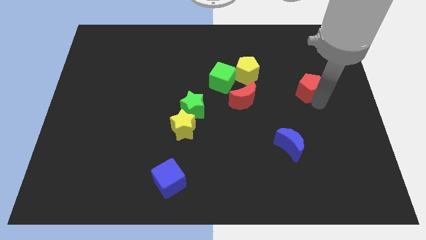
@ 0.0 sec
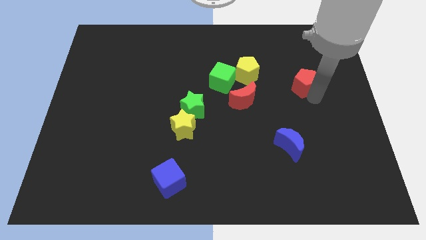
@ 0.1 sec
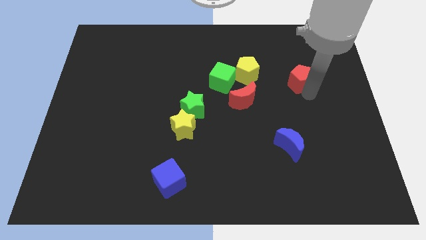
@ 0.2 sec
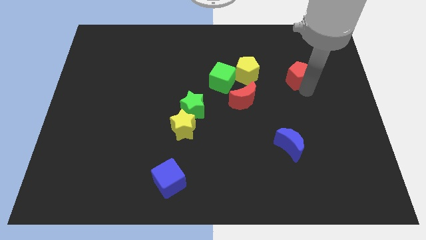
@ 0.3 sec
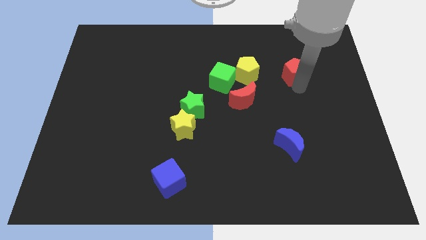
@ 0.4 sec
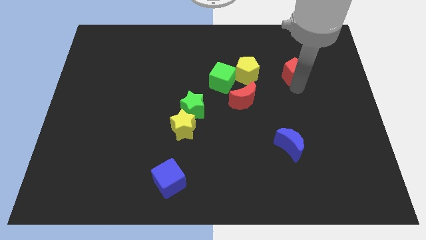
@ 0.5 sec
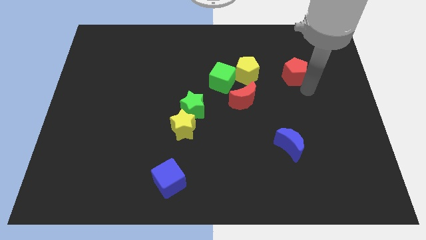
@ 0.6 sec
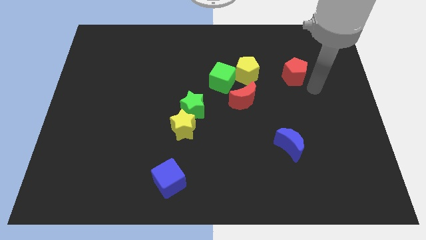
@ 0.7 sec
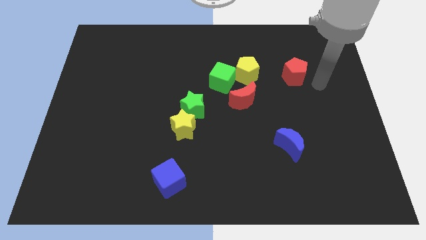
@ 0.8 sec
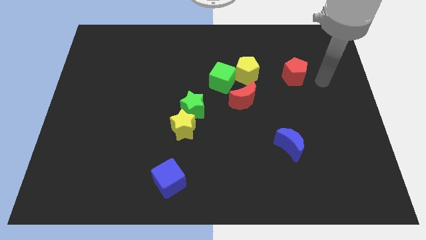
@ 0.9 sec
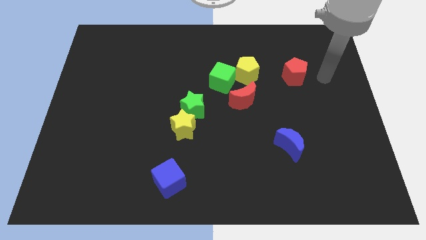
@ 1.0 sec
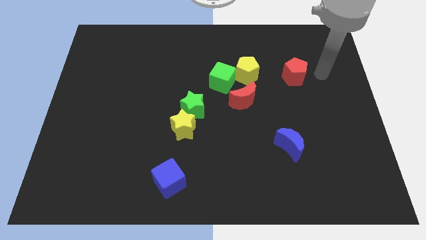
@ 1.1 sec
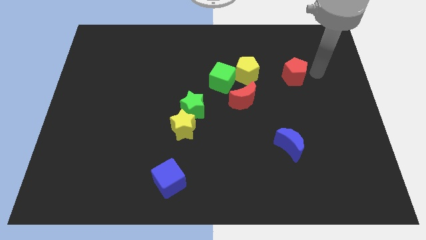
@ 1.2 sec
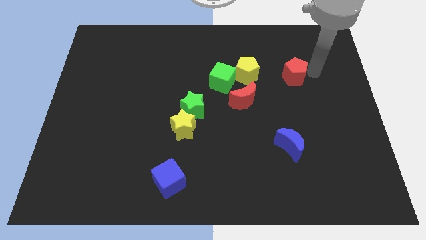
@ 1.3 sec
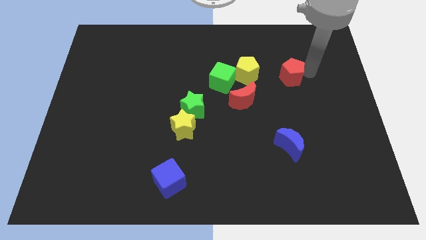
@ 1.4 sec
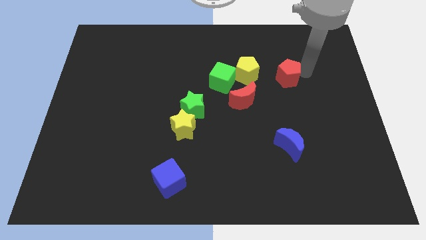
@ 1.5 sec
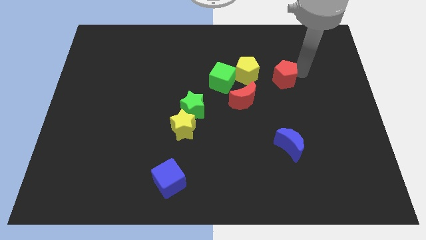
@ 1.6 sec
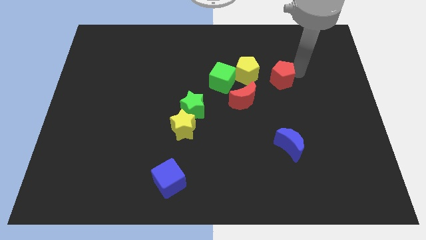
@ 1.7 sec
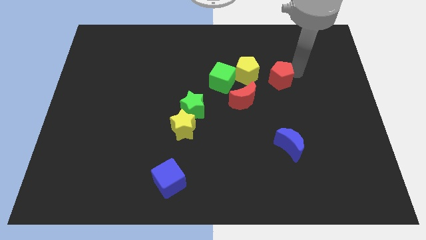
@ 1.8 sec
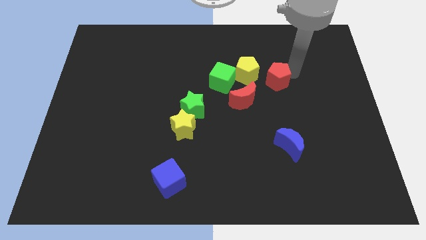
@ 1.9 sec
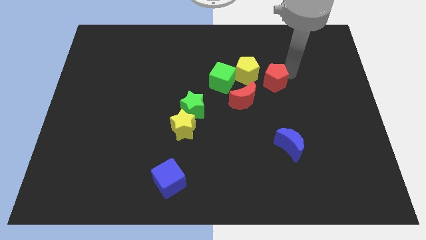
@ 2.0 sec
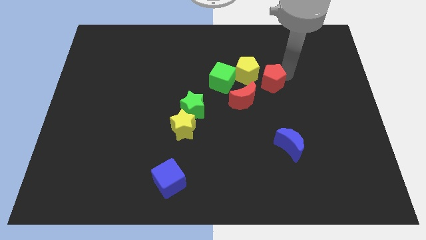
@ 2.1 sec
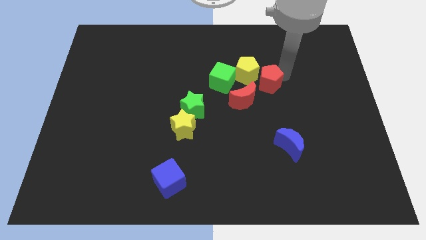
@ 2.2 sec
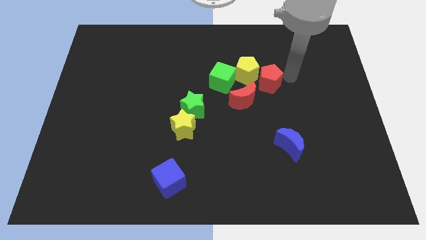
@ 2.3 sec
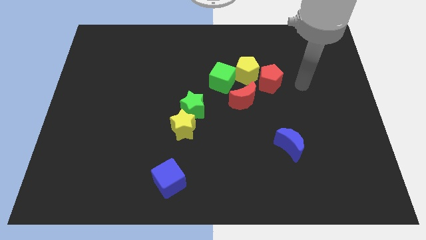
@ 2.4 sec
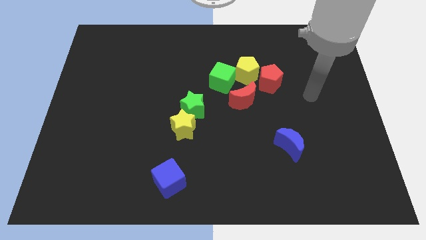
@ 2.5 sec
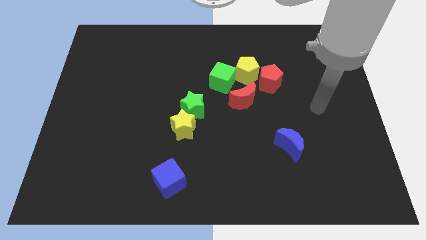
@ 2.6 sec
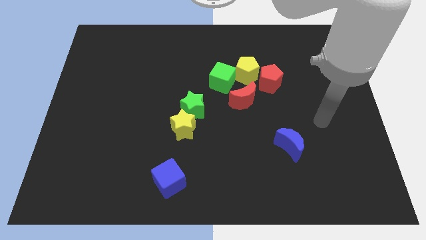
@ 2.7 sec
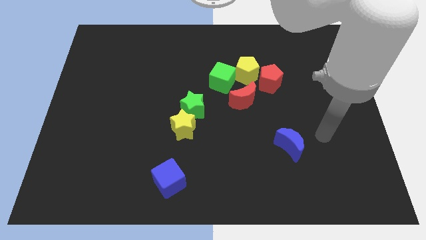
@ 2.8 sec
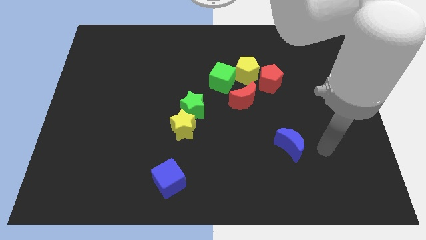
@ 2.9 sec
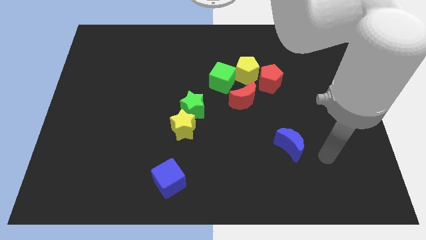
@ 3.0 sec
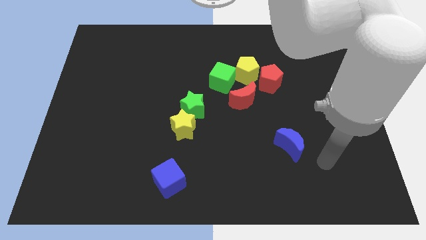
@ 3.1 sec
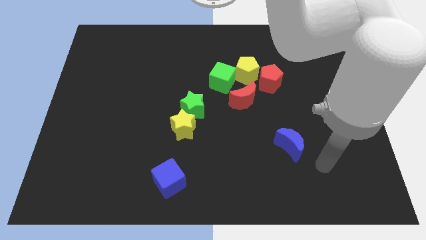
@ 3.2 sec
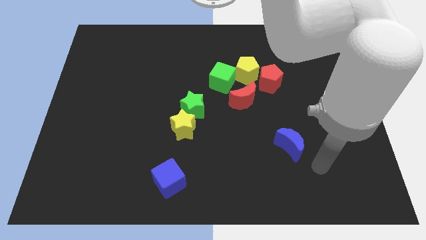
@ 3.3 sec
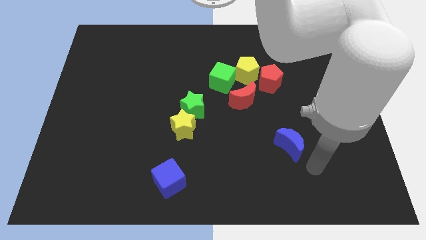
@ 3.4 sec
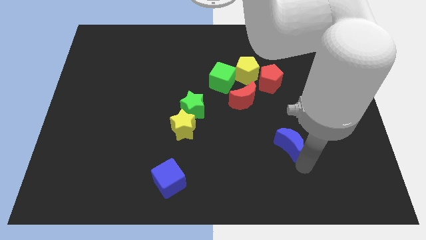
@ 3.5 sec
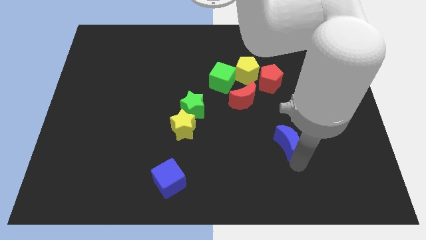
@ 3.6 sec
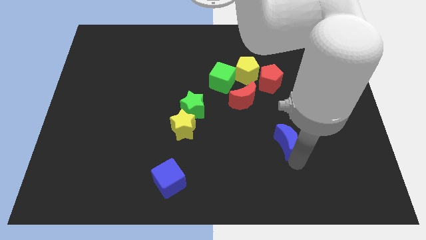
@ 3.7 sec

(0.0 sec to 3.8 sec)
place the red pentagon into the group of blocks

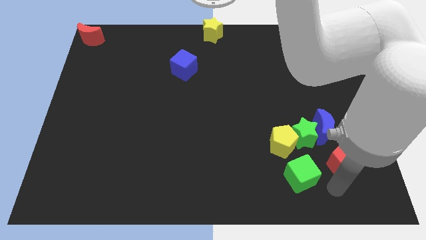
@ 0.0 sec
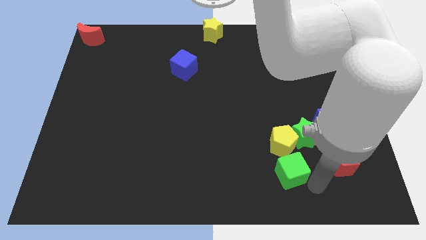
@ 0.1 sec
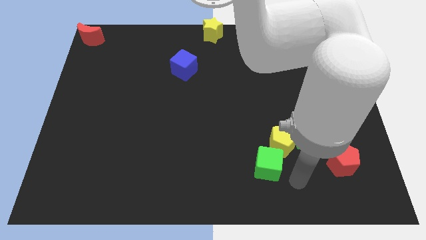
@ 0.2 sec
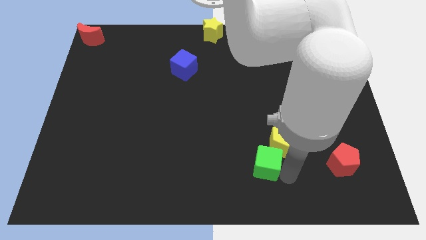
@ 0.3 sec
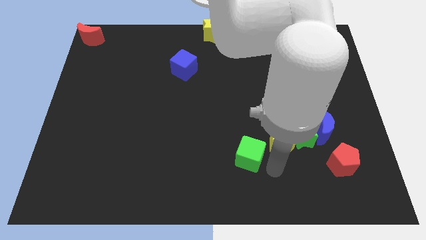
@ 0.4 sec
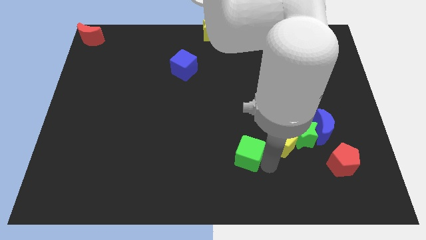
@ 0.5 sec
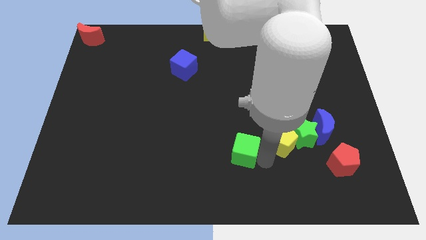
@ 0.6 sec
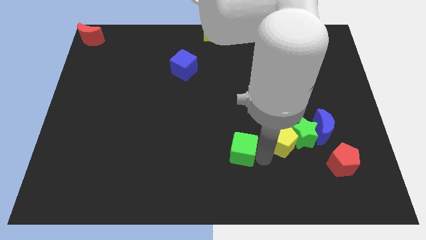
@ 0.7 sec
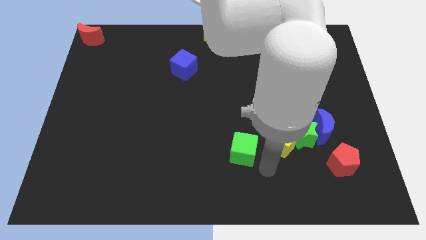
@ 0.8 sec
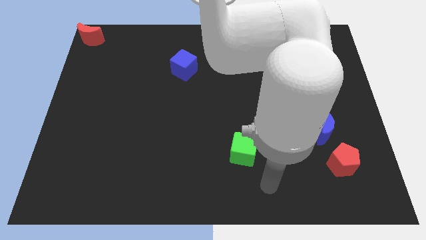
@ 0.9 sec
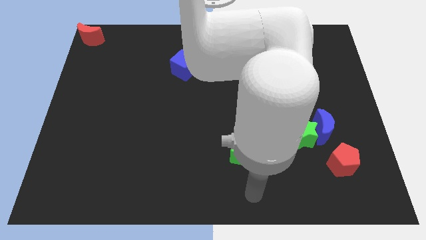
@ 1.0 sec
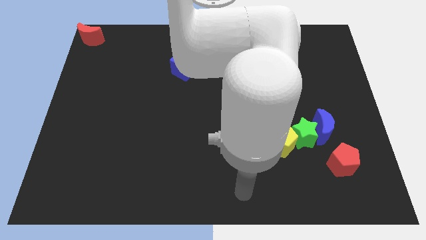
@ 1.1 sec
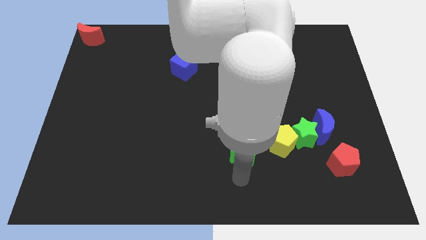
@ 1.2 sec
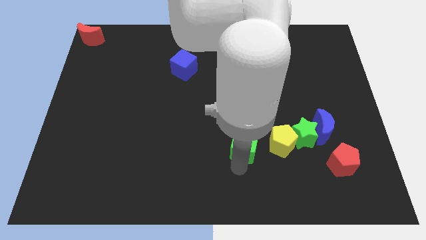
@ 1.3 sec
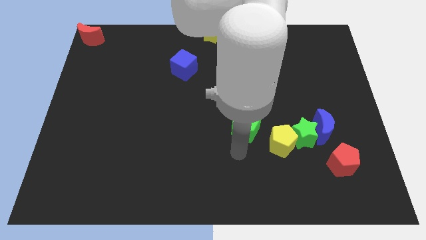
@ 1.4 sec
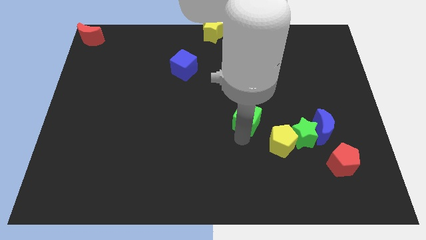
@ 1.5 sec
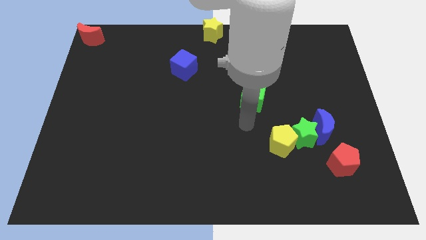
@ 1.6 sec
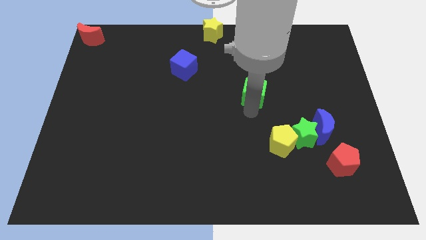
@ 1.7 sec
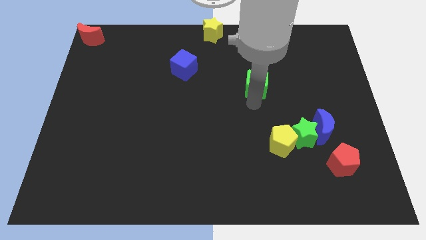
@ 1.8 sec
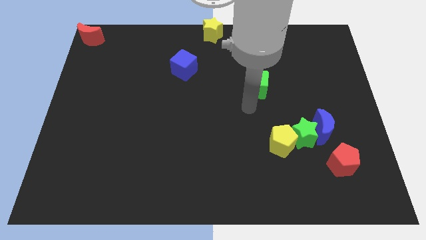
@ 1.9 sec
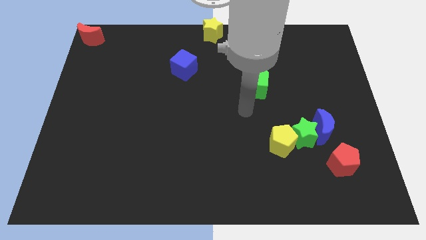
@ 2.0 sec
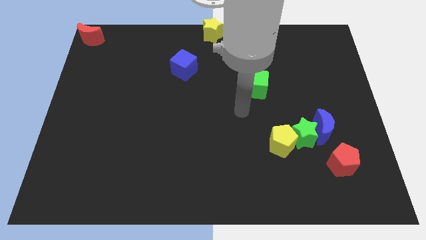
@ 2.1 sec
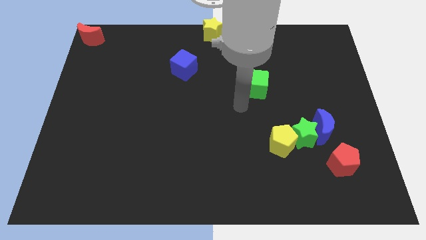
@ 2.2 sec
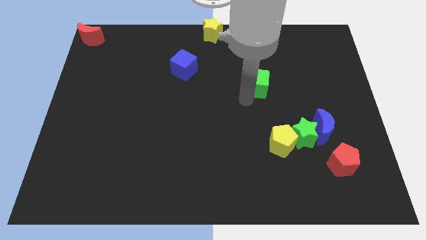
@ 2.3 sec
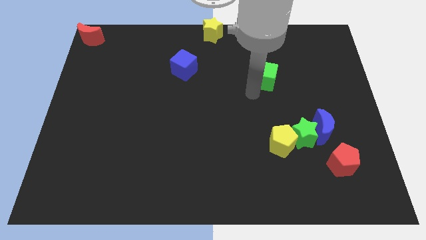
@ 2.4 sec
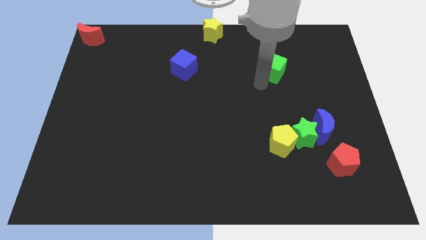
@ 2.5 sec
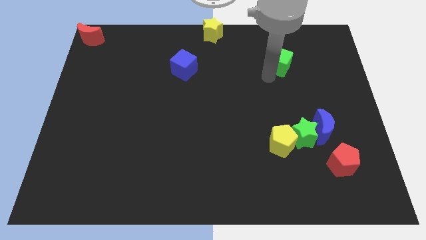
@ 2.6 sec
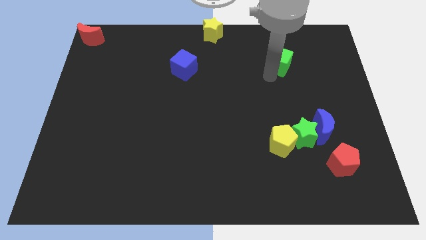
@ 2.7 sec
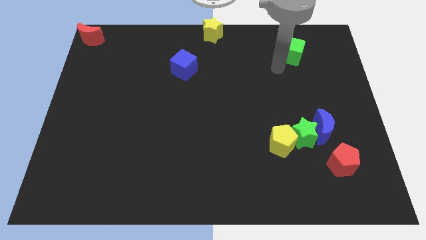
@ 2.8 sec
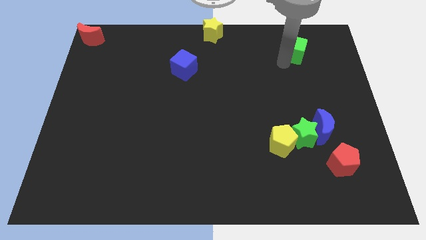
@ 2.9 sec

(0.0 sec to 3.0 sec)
move the green cube to the top of the green star

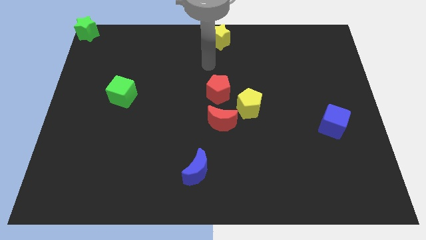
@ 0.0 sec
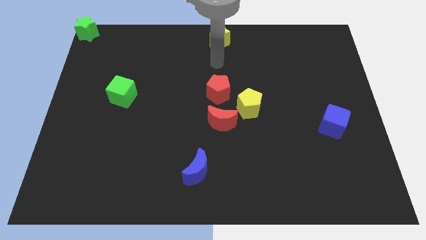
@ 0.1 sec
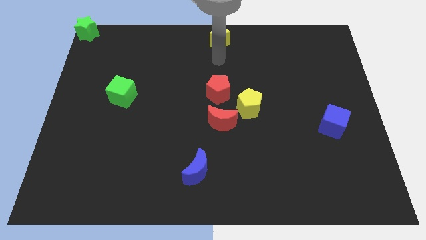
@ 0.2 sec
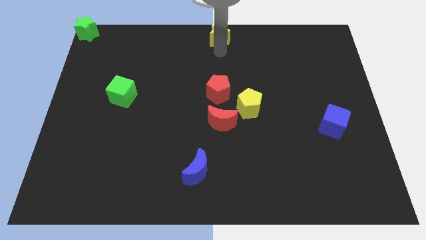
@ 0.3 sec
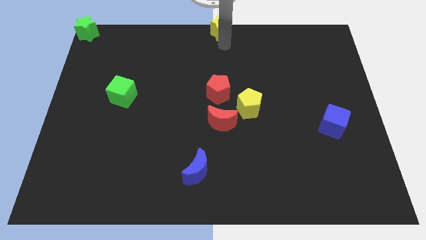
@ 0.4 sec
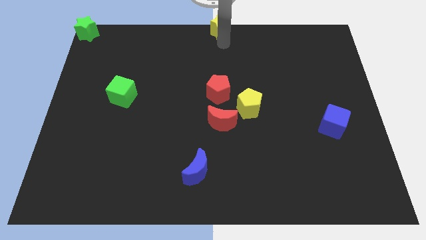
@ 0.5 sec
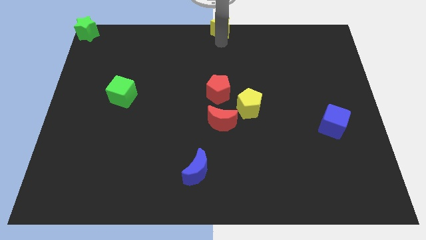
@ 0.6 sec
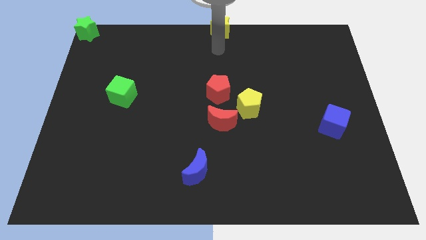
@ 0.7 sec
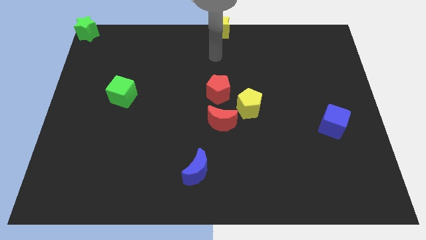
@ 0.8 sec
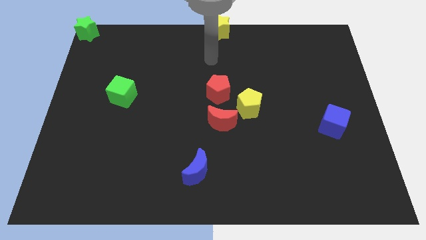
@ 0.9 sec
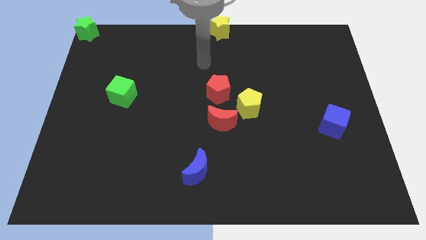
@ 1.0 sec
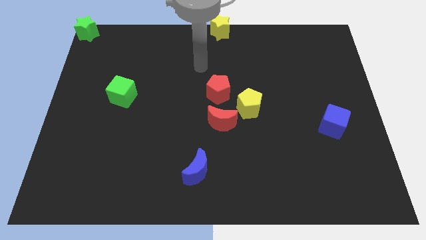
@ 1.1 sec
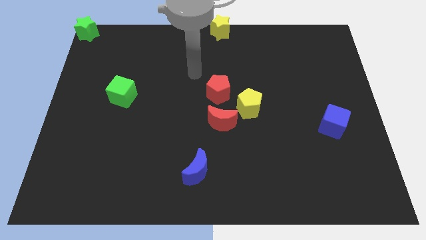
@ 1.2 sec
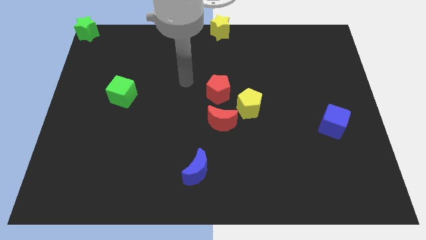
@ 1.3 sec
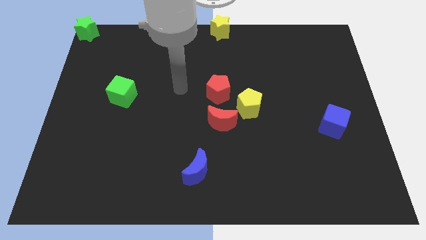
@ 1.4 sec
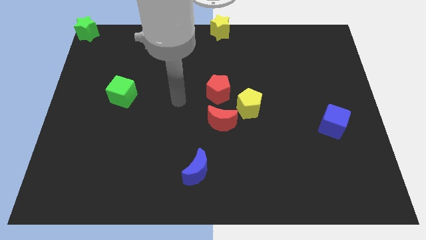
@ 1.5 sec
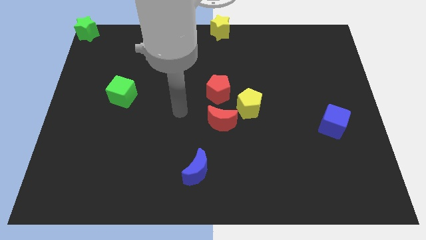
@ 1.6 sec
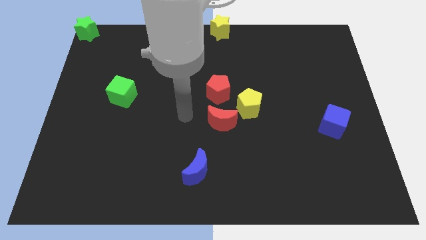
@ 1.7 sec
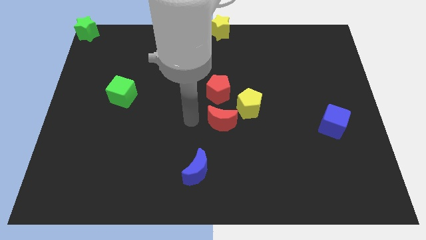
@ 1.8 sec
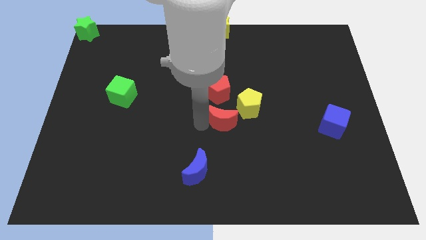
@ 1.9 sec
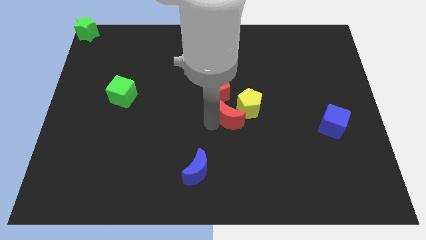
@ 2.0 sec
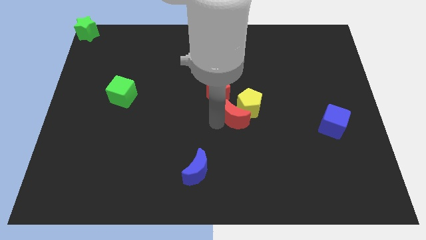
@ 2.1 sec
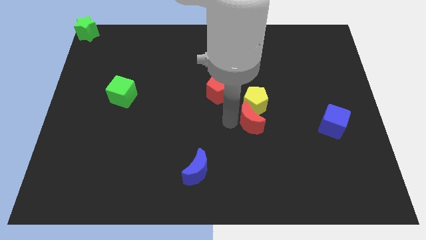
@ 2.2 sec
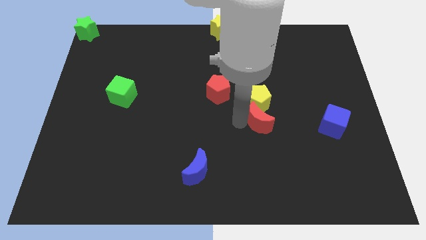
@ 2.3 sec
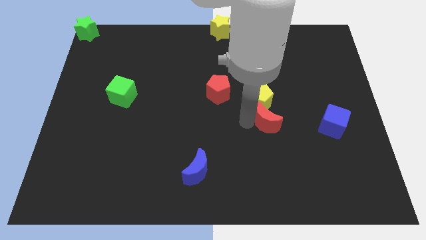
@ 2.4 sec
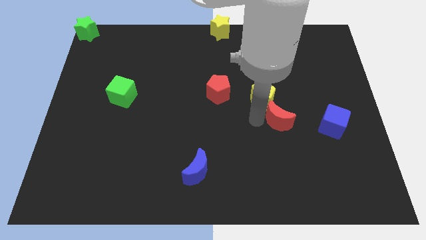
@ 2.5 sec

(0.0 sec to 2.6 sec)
move red moon into the yellow pentagon
